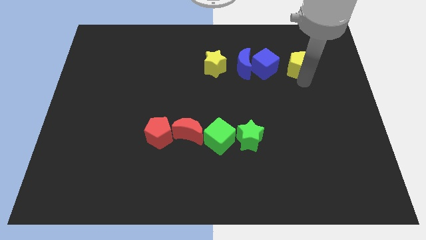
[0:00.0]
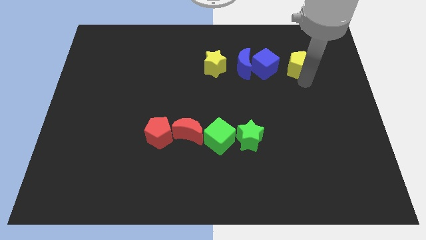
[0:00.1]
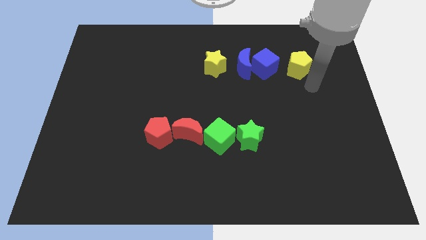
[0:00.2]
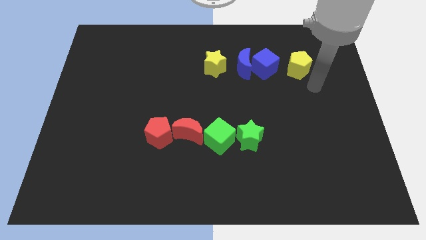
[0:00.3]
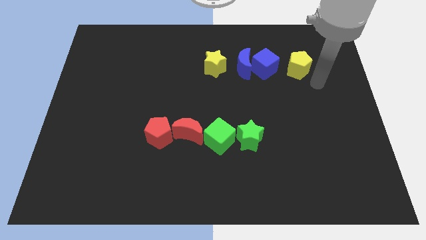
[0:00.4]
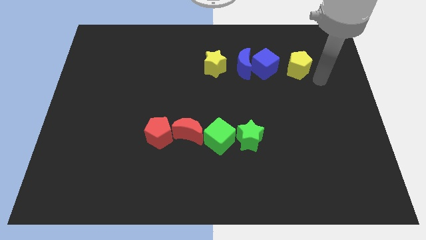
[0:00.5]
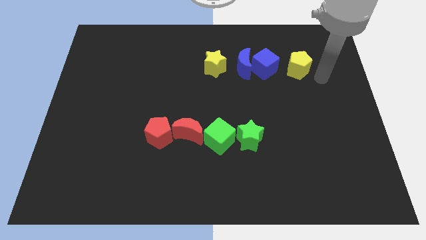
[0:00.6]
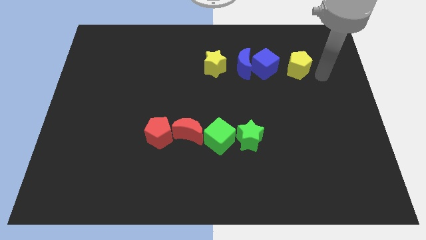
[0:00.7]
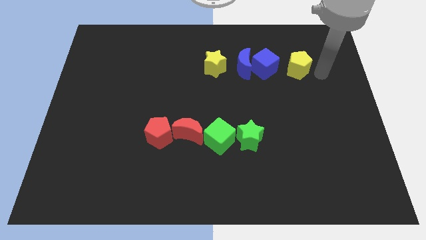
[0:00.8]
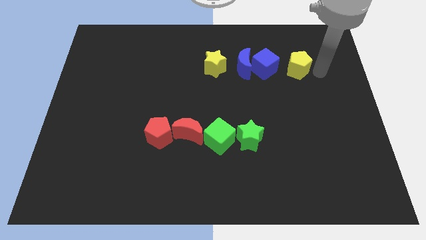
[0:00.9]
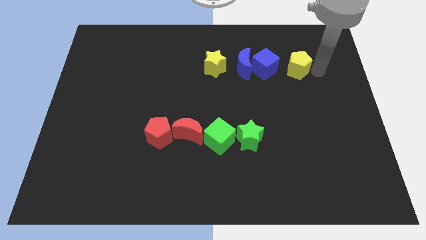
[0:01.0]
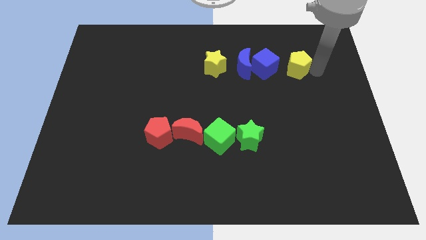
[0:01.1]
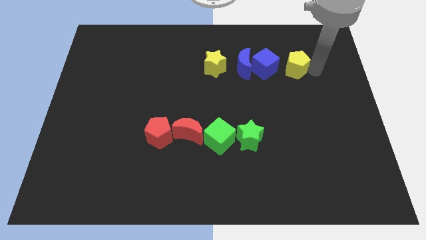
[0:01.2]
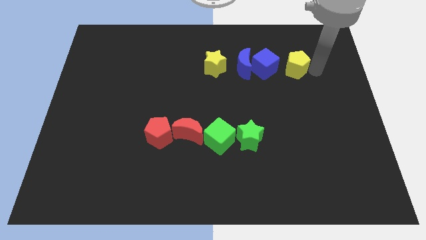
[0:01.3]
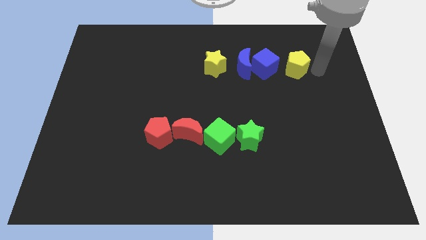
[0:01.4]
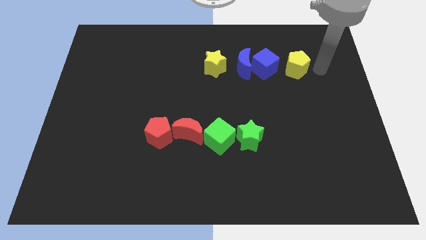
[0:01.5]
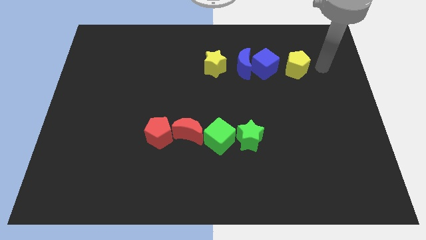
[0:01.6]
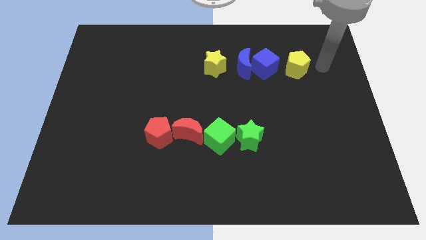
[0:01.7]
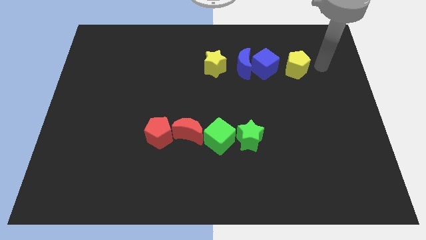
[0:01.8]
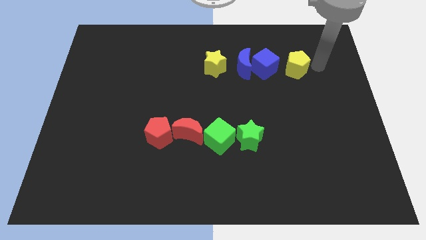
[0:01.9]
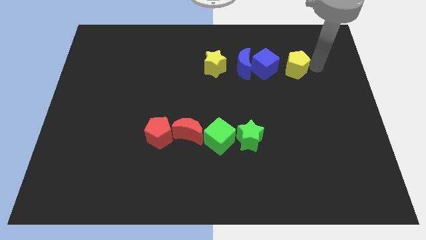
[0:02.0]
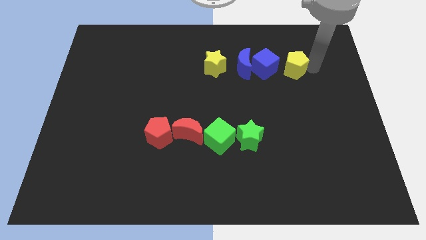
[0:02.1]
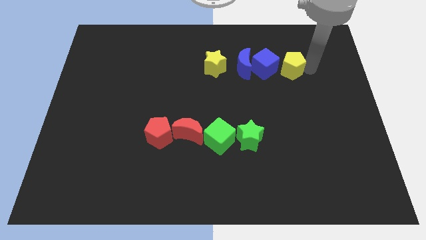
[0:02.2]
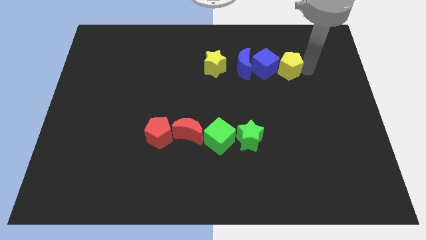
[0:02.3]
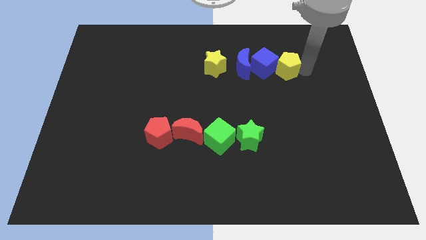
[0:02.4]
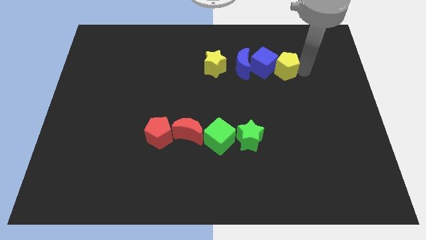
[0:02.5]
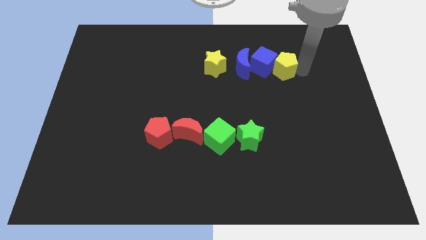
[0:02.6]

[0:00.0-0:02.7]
push the yellow pentagon into blue cube

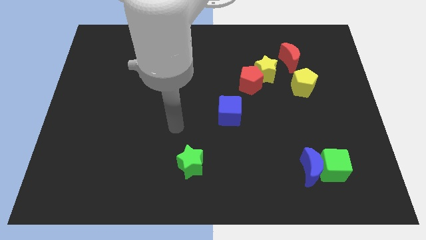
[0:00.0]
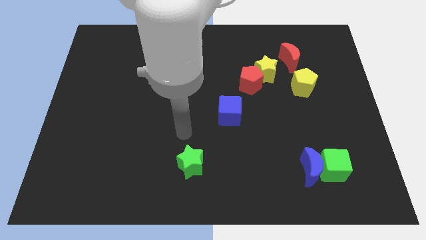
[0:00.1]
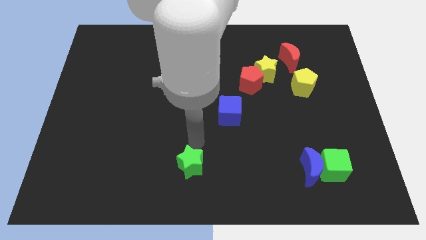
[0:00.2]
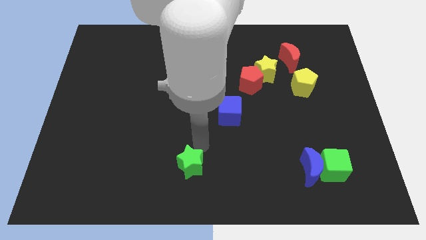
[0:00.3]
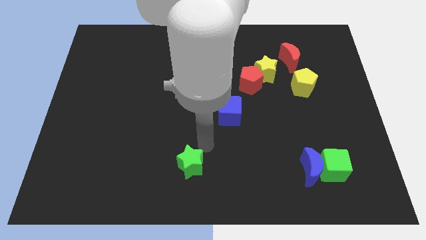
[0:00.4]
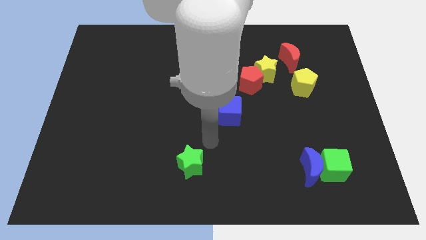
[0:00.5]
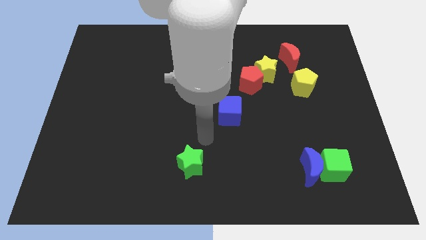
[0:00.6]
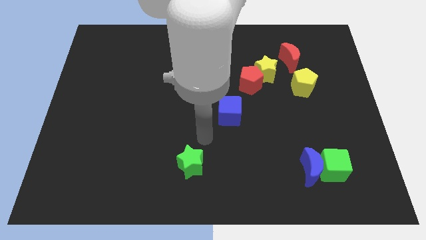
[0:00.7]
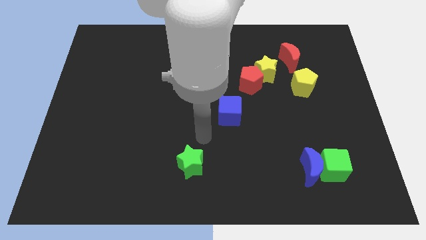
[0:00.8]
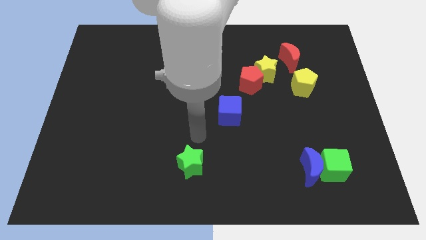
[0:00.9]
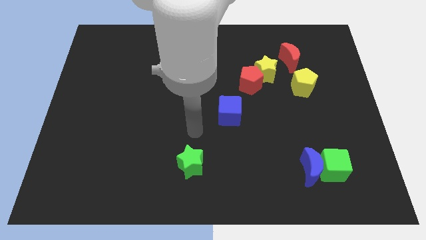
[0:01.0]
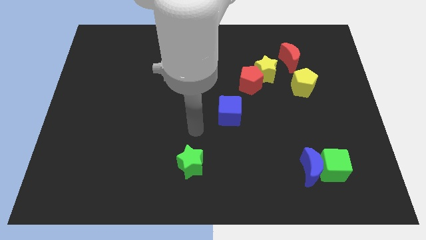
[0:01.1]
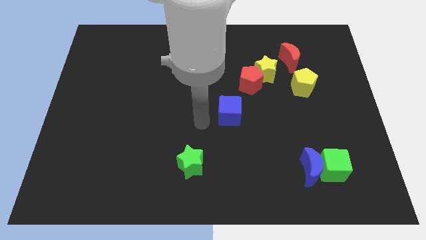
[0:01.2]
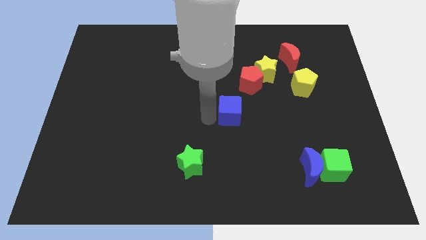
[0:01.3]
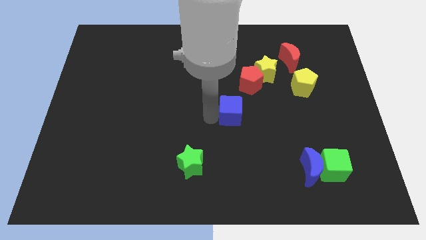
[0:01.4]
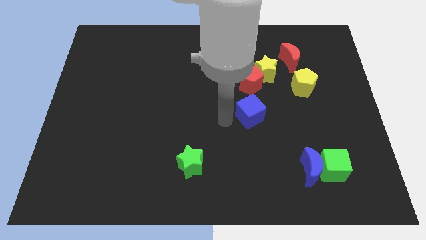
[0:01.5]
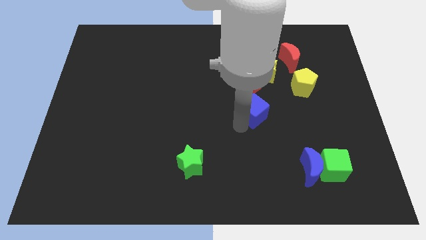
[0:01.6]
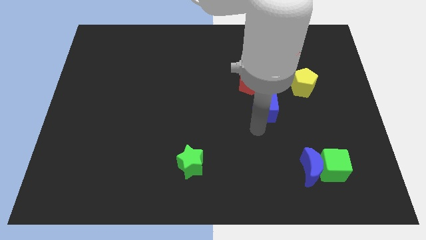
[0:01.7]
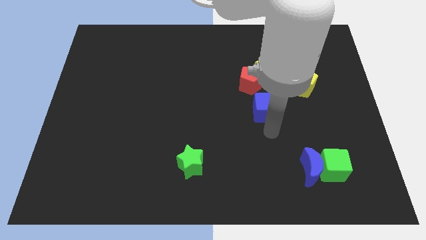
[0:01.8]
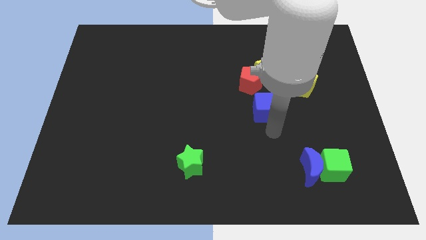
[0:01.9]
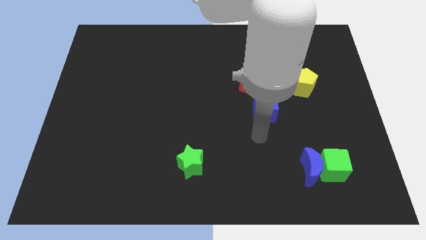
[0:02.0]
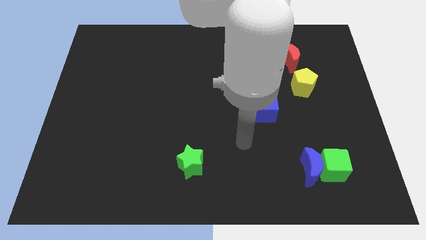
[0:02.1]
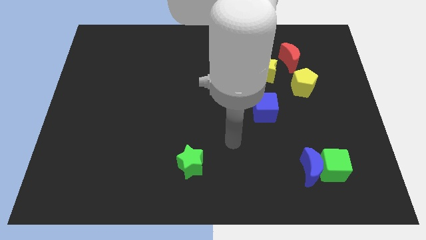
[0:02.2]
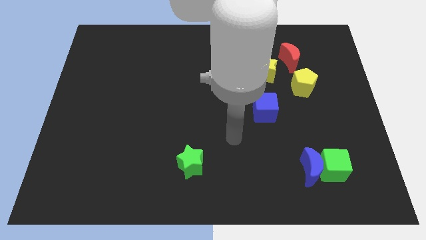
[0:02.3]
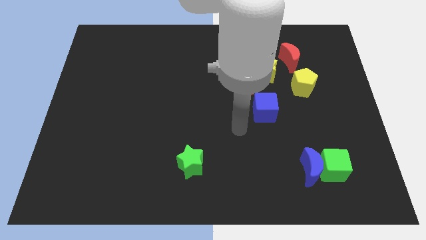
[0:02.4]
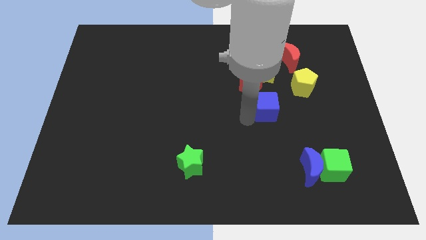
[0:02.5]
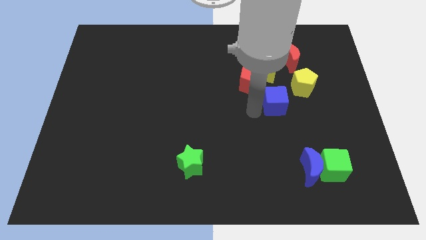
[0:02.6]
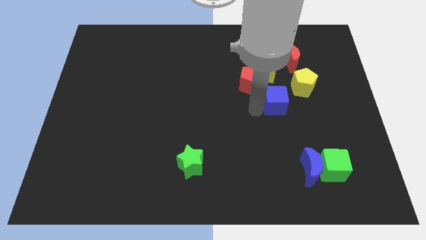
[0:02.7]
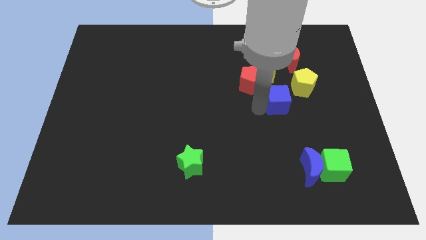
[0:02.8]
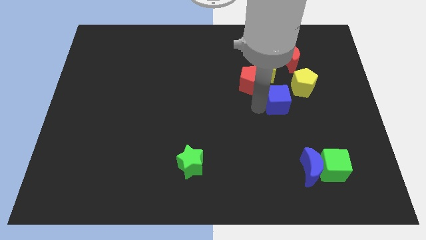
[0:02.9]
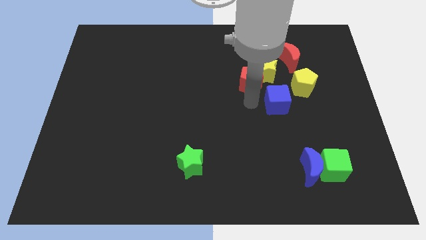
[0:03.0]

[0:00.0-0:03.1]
move the blue cube towards the left side of the yellow pentagon

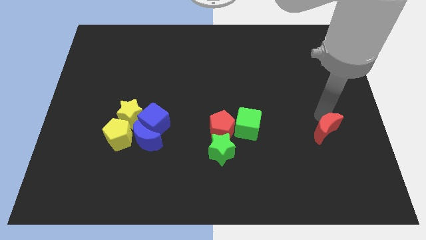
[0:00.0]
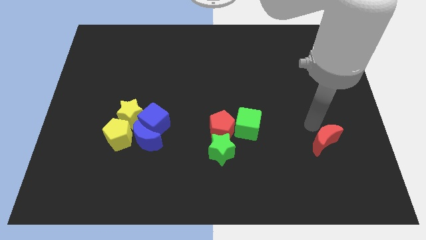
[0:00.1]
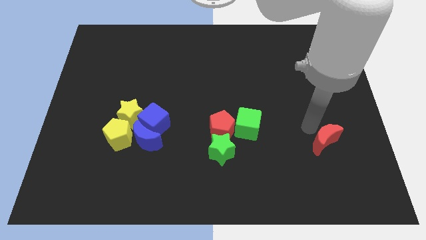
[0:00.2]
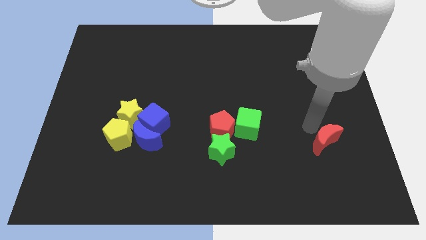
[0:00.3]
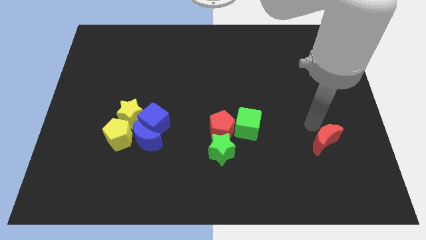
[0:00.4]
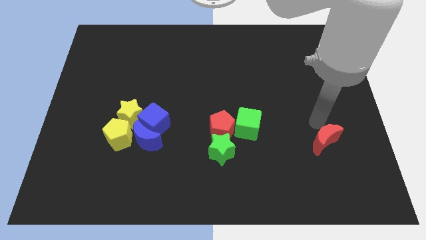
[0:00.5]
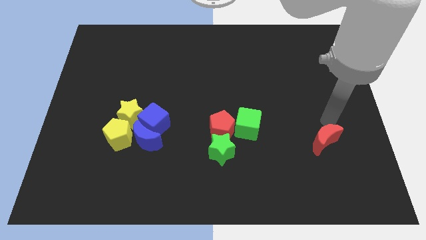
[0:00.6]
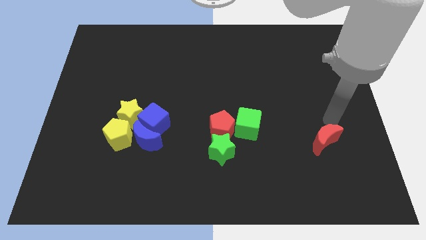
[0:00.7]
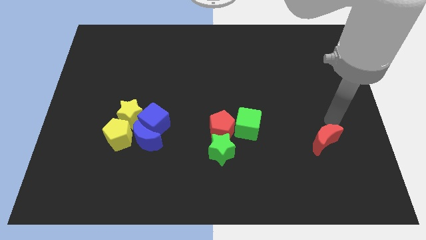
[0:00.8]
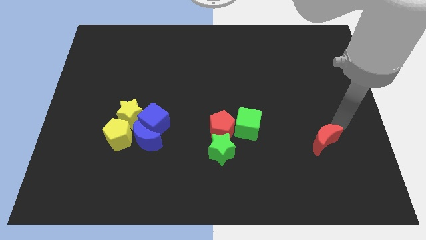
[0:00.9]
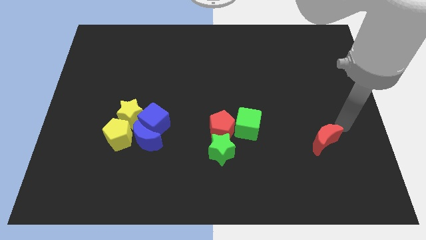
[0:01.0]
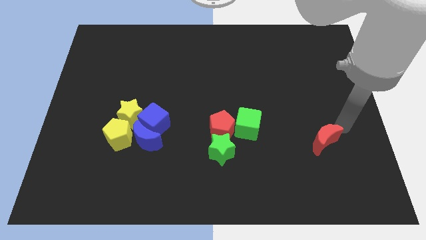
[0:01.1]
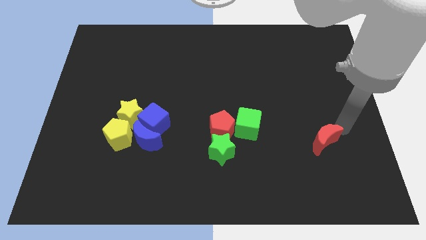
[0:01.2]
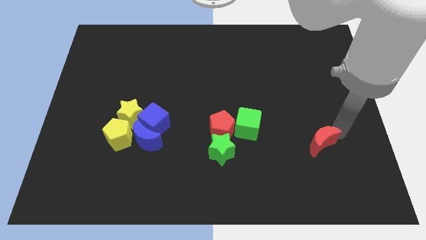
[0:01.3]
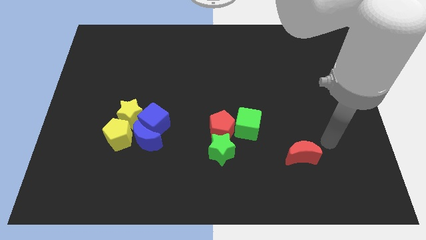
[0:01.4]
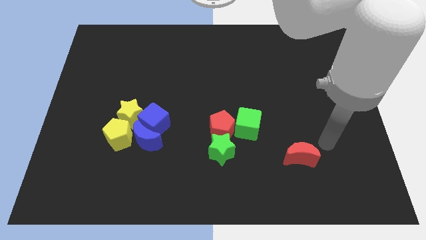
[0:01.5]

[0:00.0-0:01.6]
push red moon towards the bottom

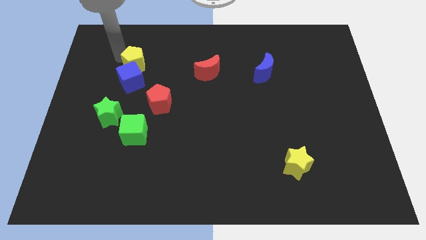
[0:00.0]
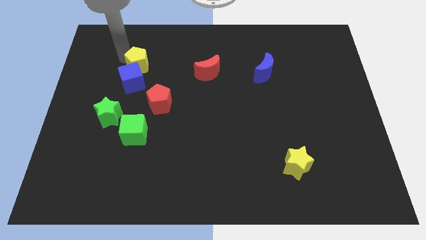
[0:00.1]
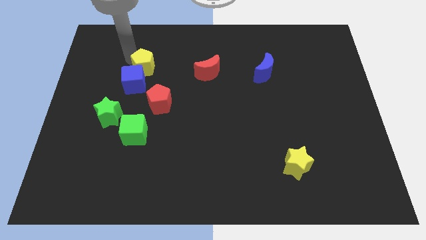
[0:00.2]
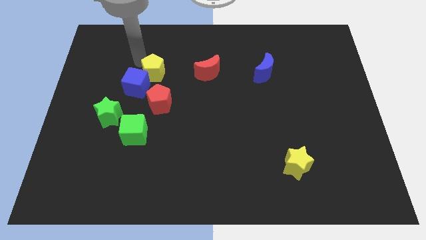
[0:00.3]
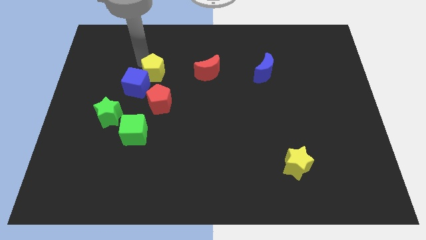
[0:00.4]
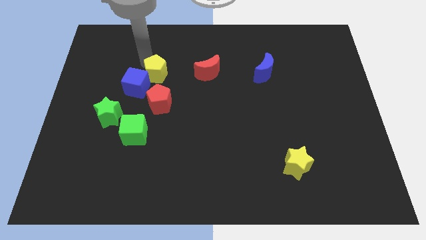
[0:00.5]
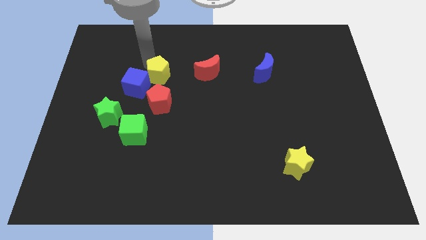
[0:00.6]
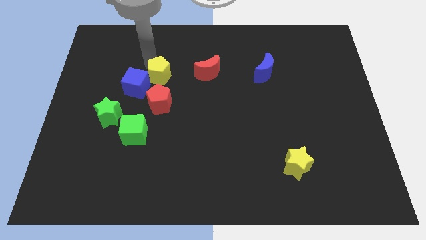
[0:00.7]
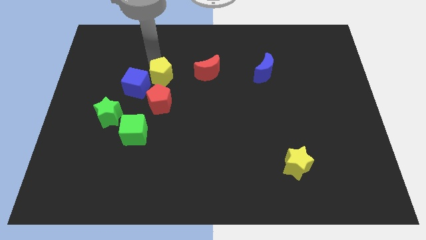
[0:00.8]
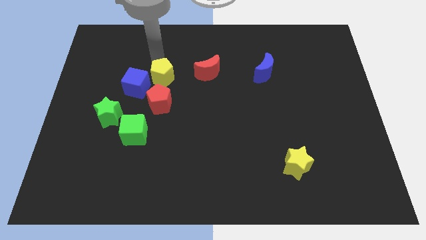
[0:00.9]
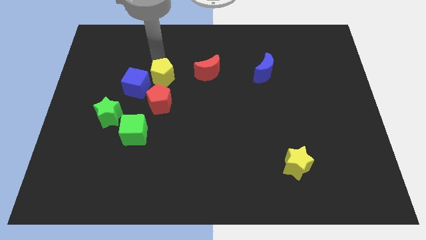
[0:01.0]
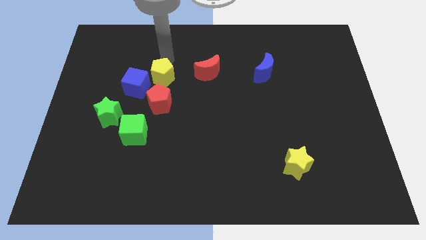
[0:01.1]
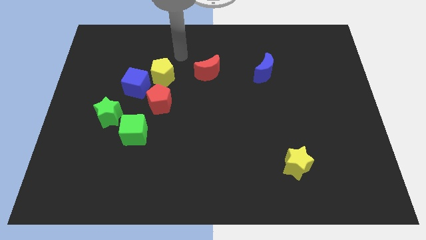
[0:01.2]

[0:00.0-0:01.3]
push yellow pentagon into blue cube

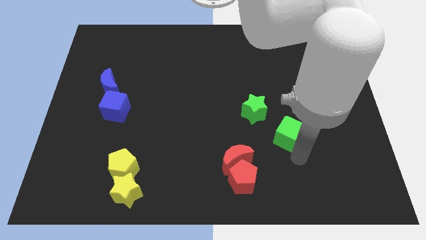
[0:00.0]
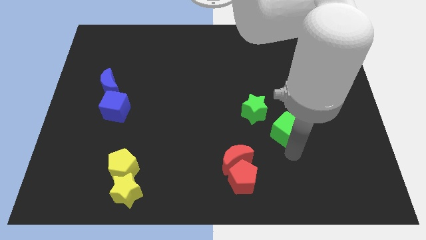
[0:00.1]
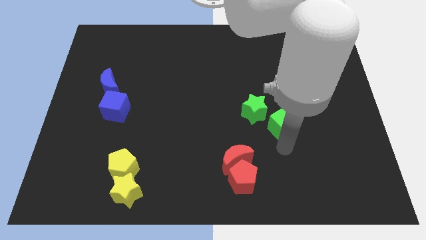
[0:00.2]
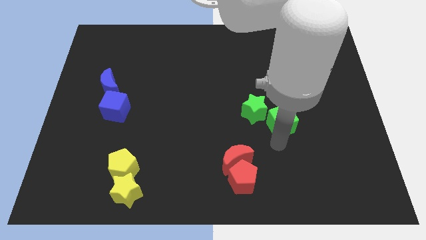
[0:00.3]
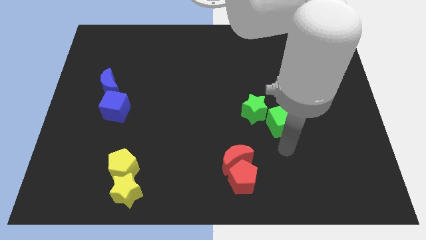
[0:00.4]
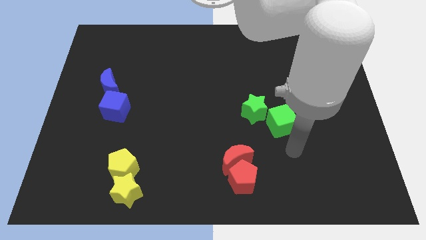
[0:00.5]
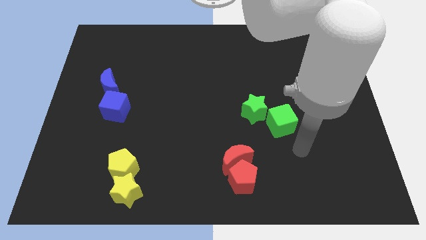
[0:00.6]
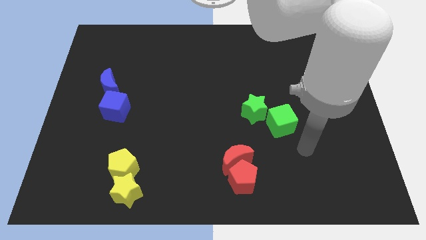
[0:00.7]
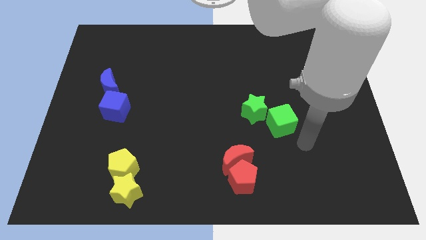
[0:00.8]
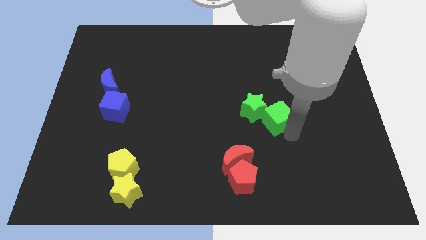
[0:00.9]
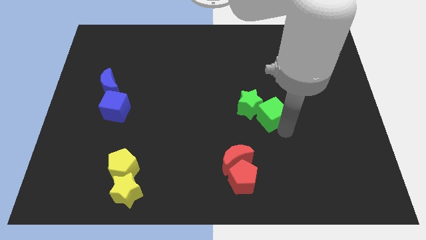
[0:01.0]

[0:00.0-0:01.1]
push the green cube into the green star
